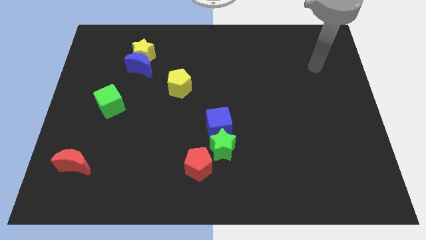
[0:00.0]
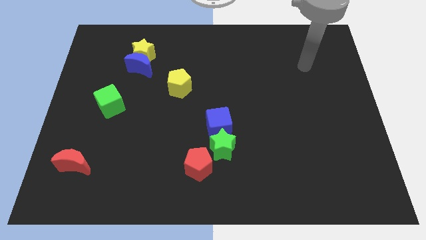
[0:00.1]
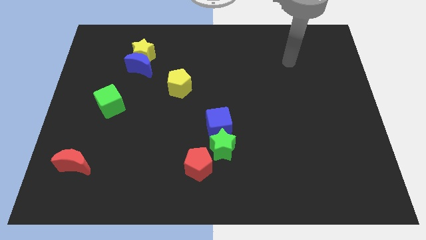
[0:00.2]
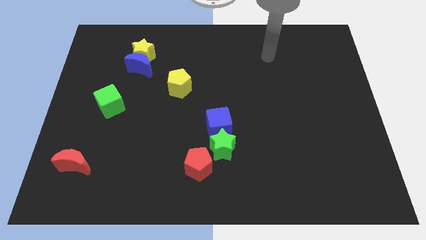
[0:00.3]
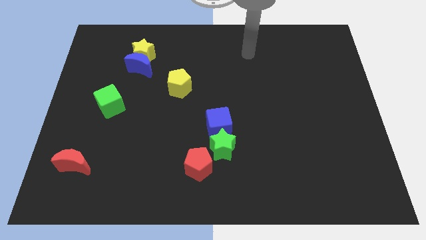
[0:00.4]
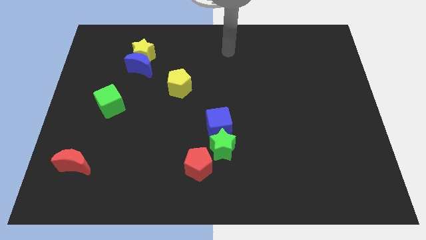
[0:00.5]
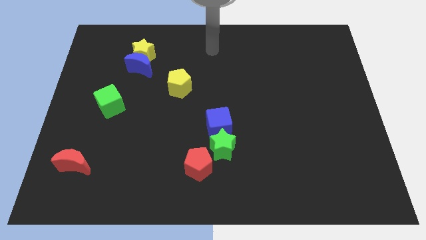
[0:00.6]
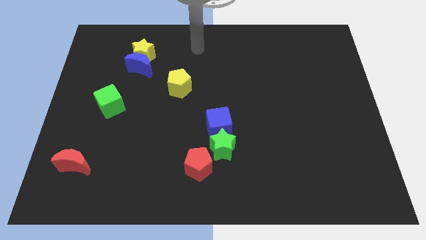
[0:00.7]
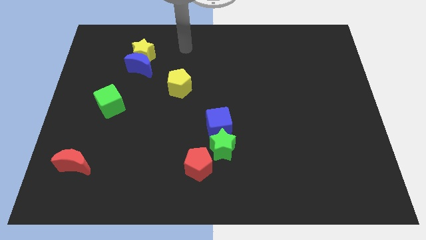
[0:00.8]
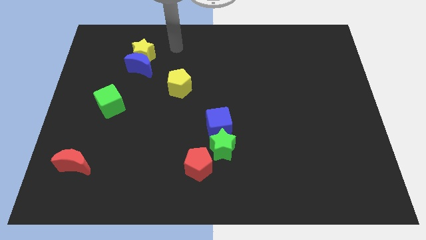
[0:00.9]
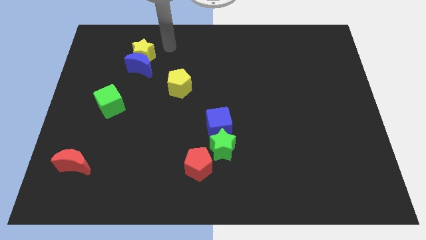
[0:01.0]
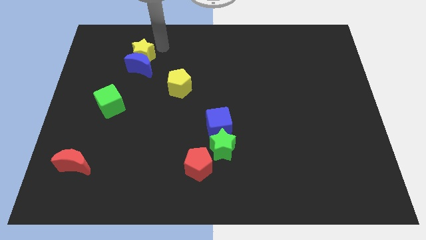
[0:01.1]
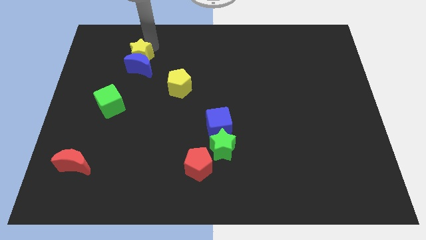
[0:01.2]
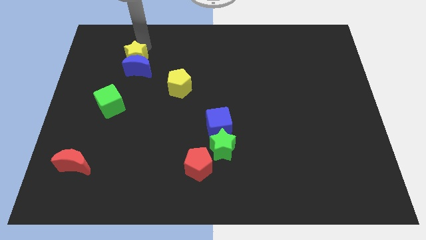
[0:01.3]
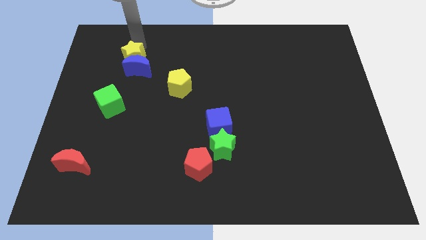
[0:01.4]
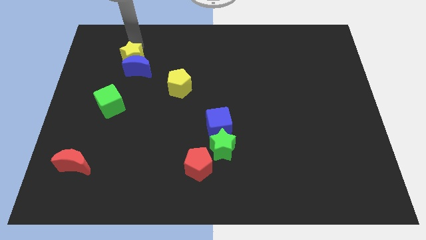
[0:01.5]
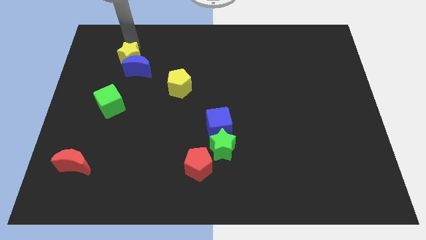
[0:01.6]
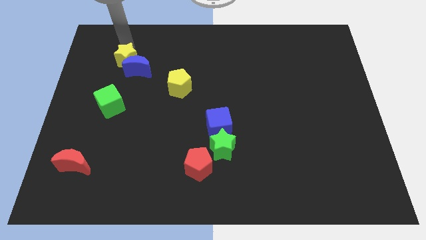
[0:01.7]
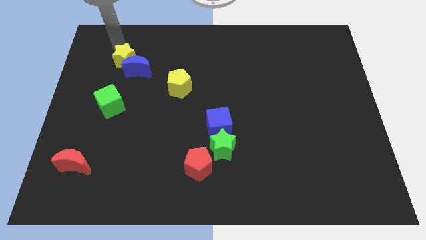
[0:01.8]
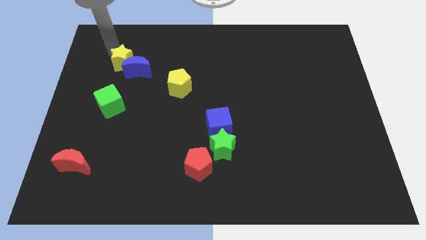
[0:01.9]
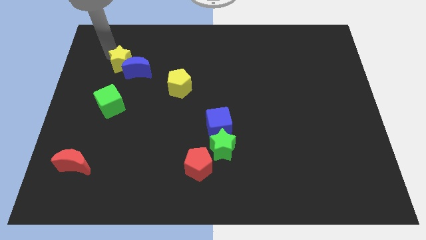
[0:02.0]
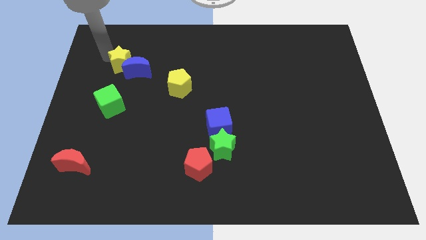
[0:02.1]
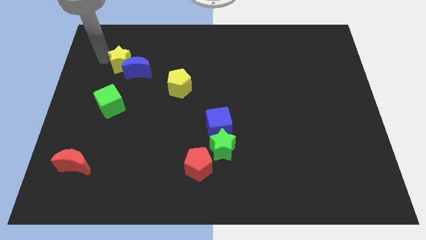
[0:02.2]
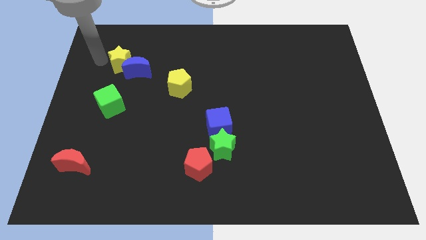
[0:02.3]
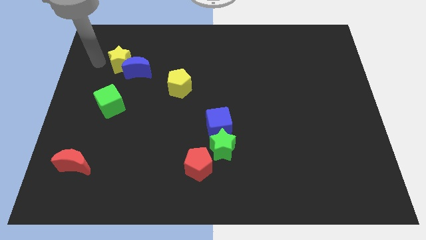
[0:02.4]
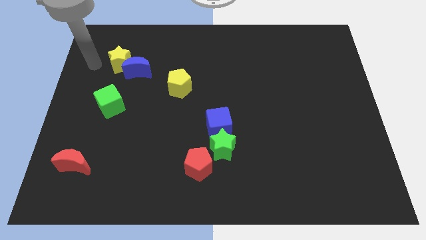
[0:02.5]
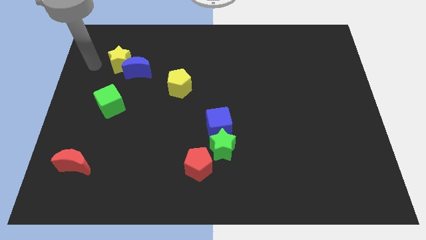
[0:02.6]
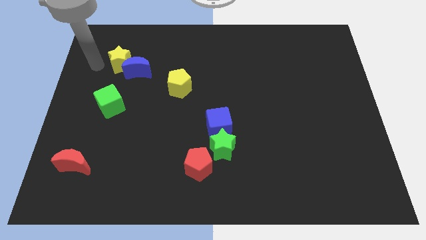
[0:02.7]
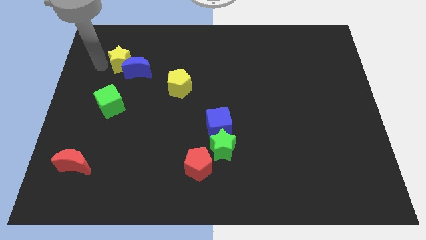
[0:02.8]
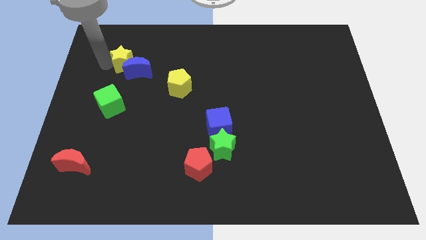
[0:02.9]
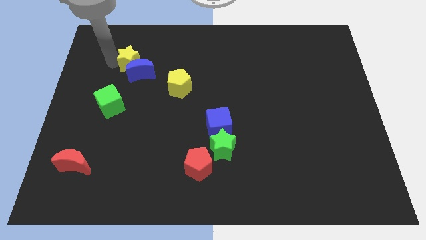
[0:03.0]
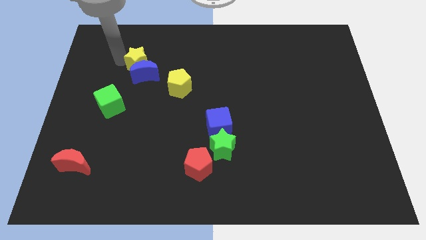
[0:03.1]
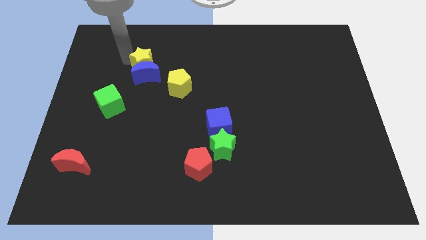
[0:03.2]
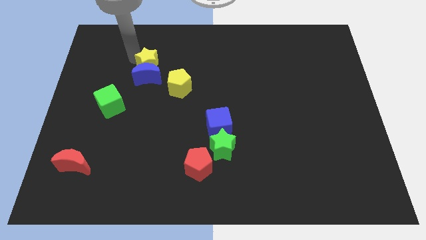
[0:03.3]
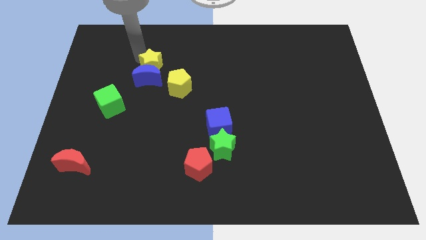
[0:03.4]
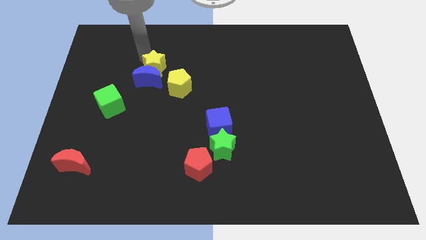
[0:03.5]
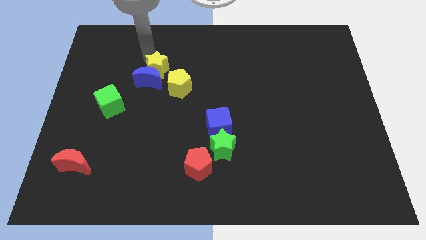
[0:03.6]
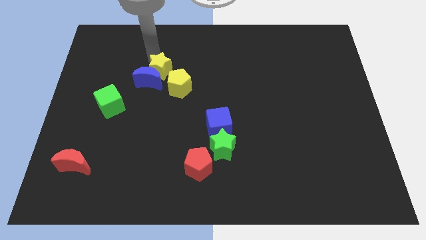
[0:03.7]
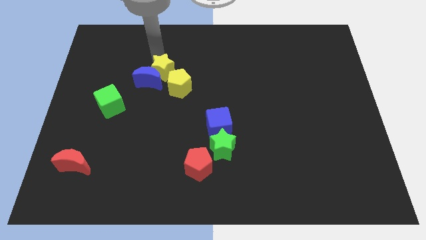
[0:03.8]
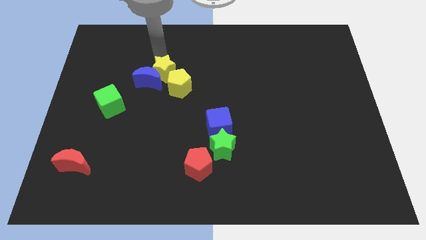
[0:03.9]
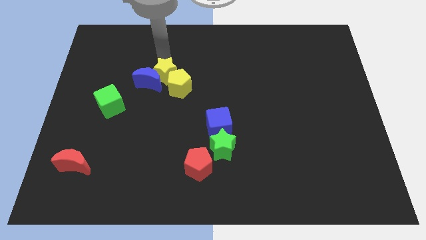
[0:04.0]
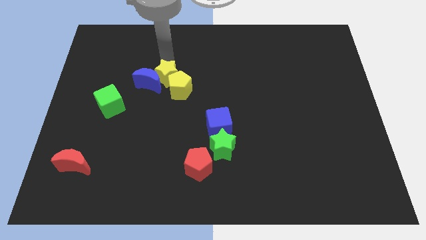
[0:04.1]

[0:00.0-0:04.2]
put the yellow star towards the yellow pentagon

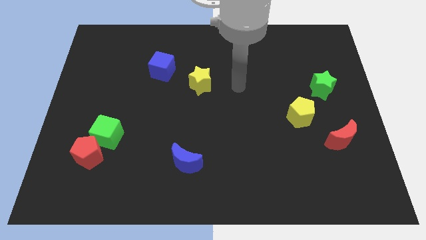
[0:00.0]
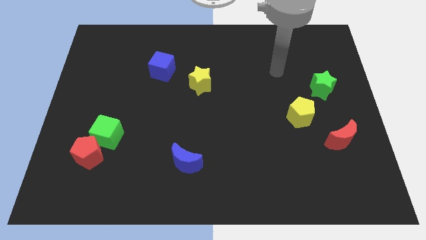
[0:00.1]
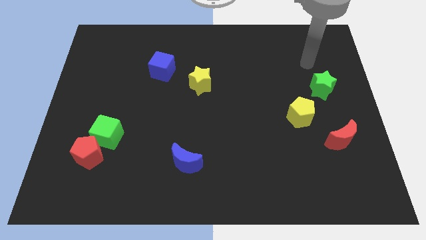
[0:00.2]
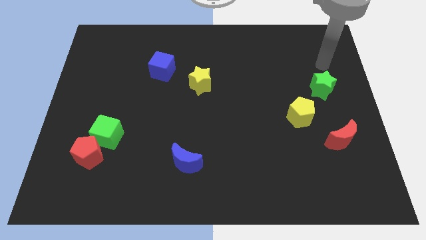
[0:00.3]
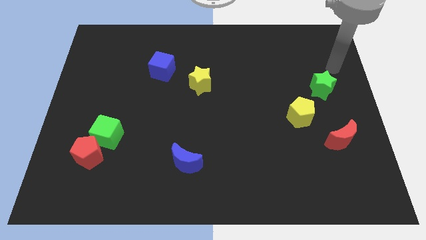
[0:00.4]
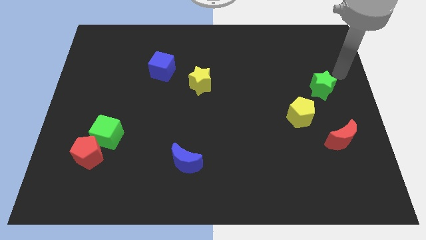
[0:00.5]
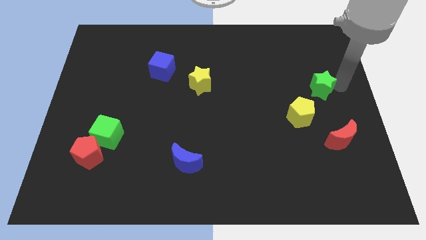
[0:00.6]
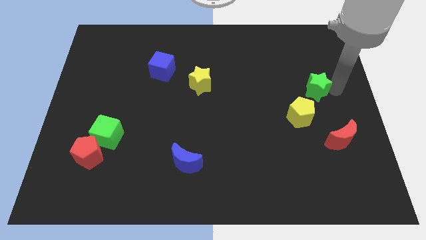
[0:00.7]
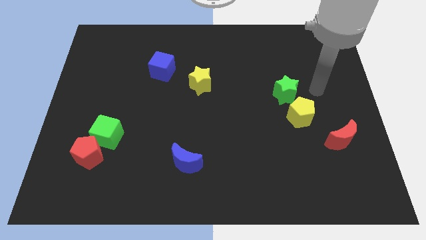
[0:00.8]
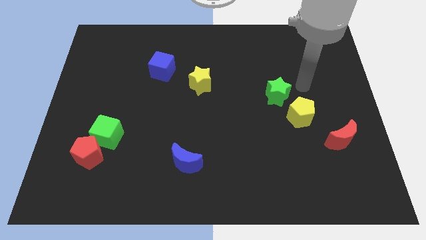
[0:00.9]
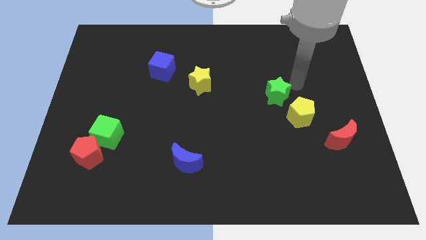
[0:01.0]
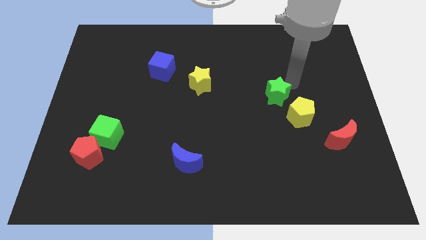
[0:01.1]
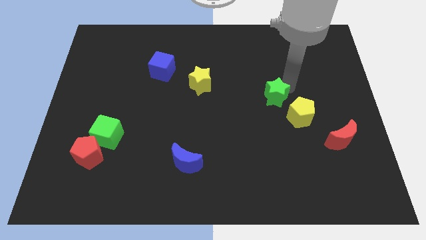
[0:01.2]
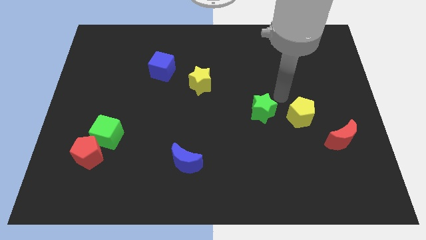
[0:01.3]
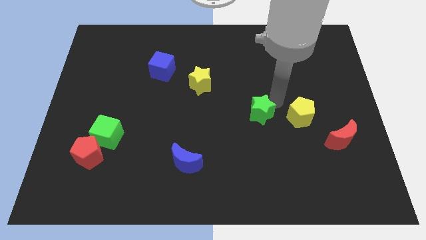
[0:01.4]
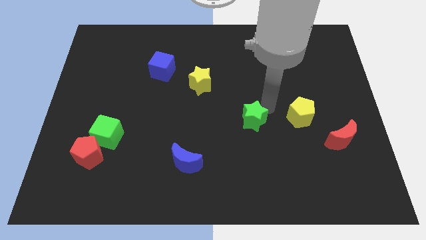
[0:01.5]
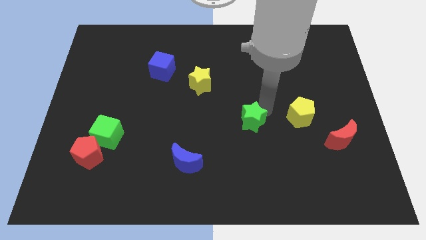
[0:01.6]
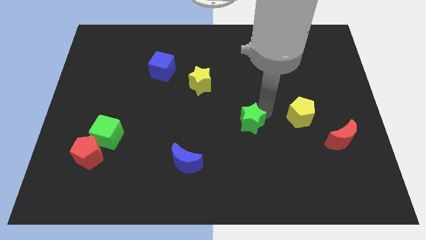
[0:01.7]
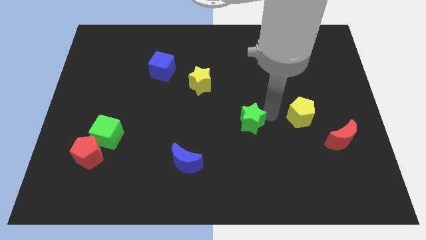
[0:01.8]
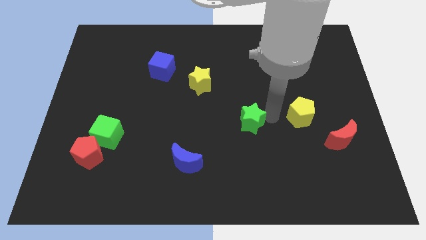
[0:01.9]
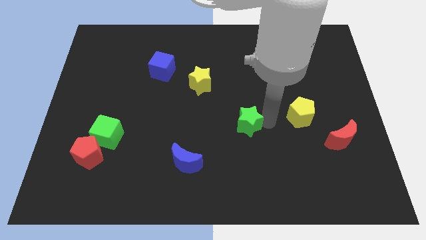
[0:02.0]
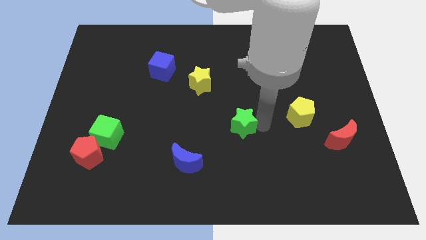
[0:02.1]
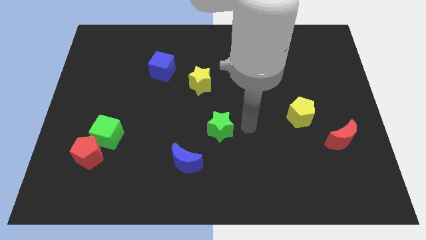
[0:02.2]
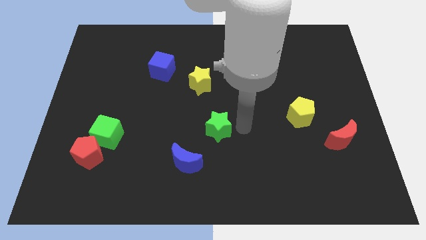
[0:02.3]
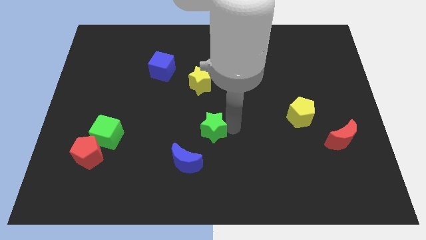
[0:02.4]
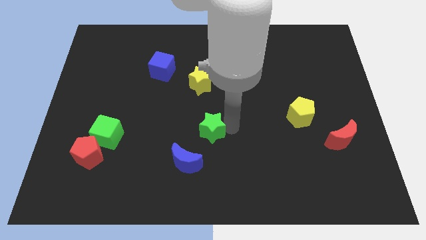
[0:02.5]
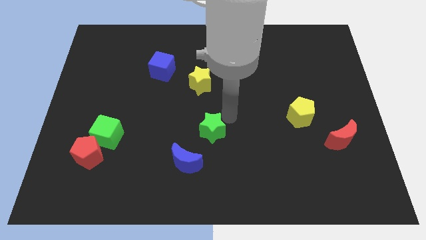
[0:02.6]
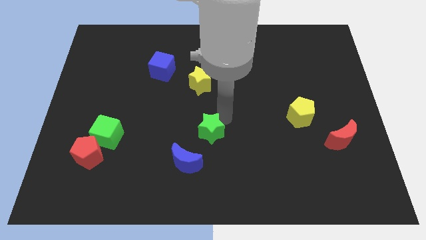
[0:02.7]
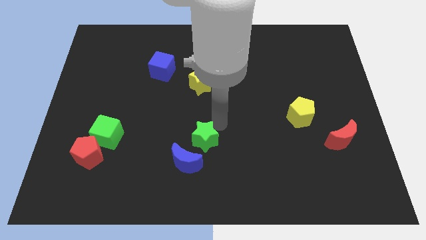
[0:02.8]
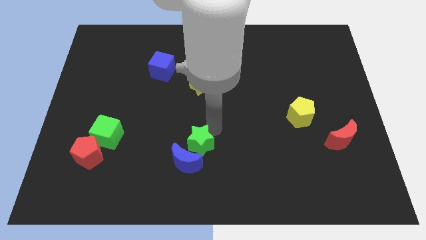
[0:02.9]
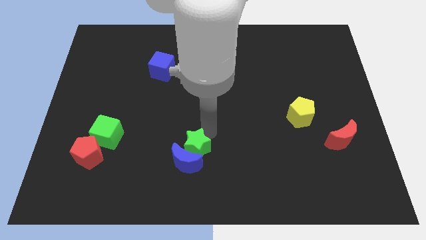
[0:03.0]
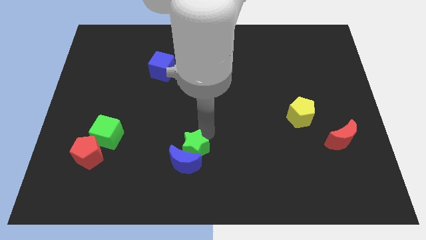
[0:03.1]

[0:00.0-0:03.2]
put the green star to the blue moon

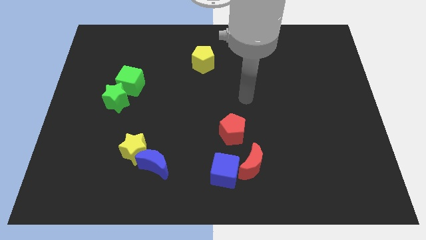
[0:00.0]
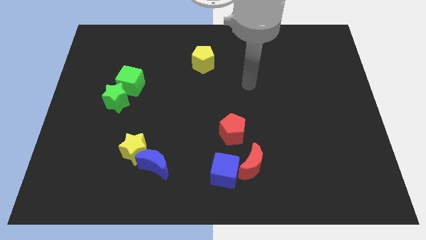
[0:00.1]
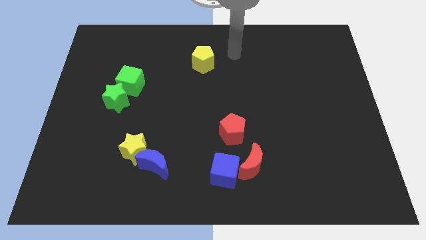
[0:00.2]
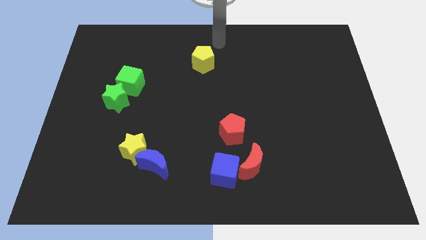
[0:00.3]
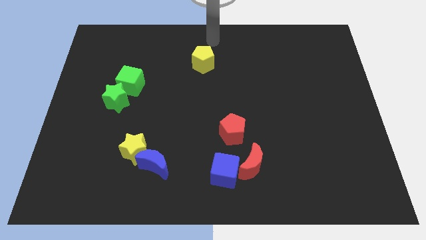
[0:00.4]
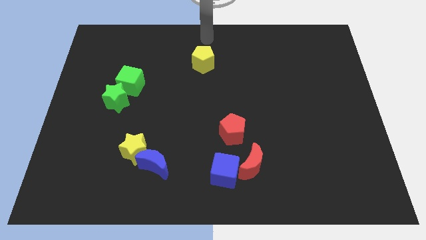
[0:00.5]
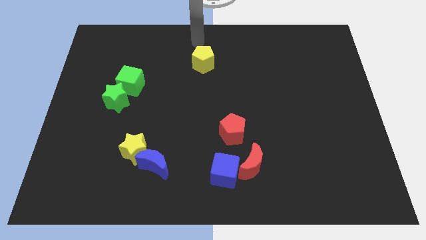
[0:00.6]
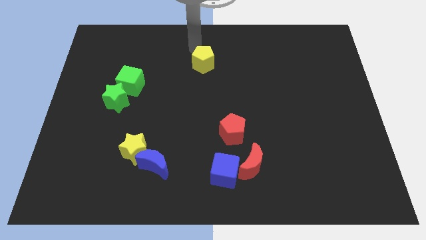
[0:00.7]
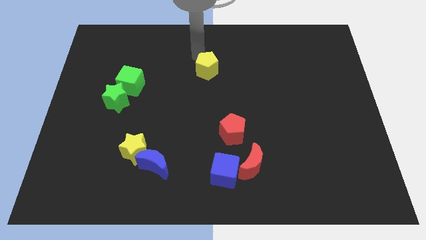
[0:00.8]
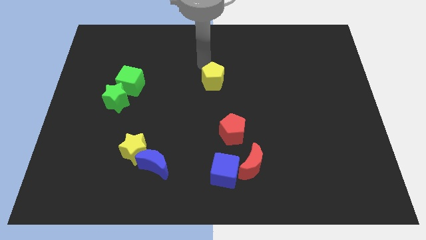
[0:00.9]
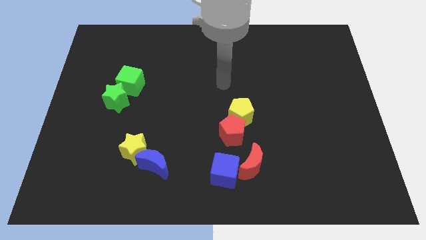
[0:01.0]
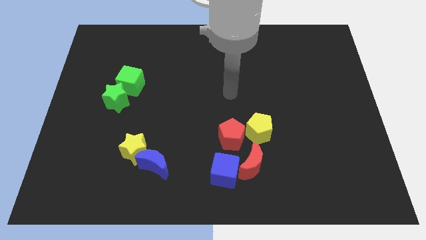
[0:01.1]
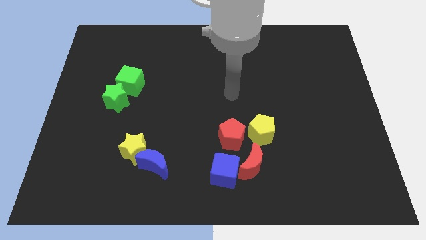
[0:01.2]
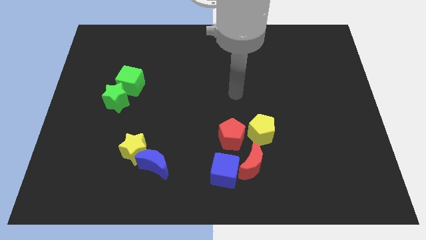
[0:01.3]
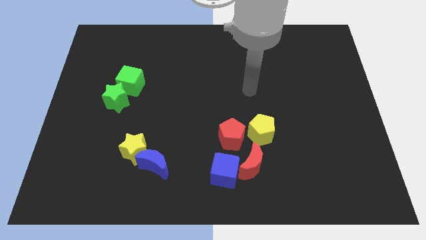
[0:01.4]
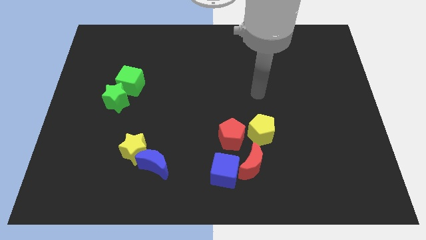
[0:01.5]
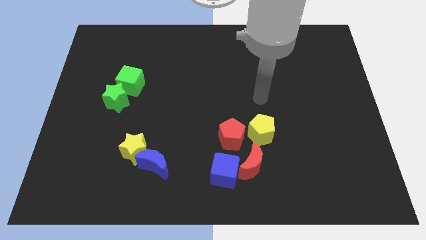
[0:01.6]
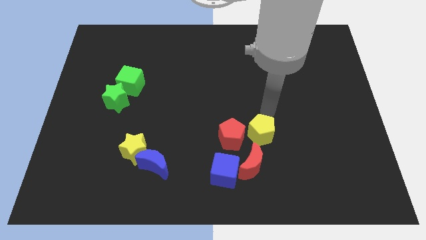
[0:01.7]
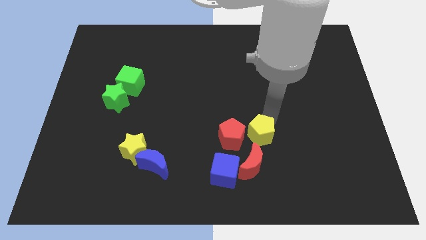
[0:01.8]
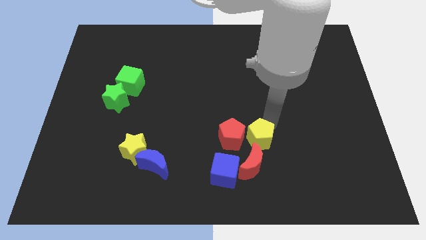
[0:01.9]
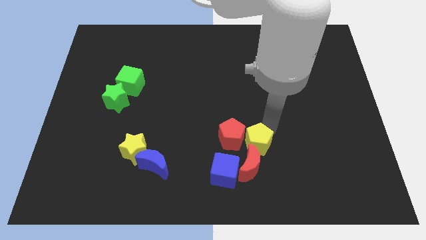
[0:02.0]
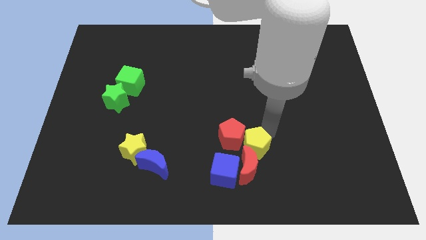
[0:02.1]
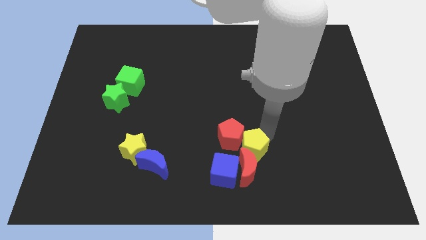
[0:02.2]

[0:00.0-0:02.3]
move the yellow pentagon close to the red moon
